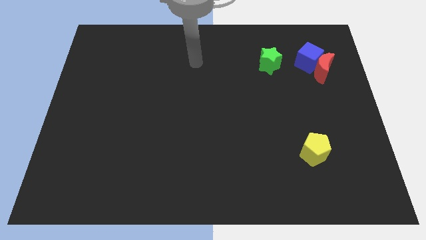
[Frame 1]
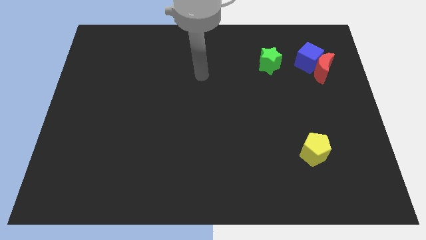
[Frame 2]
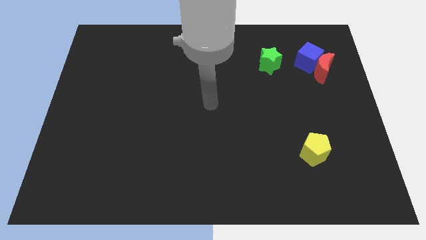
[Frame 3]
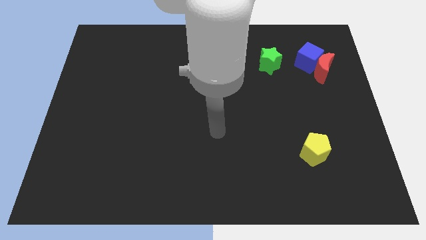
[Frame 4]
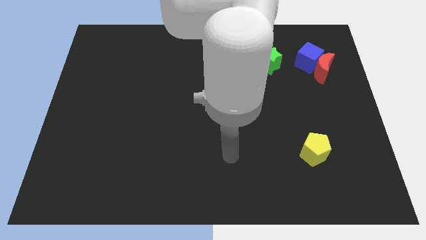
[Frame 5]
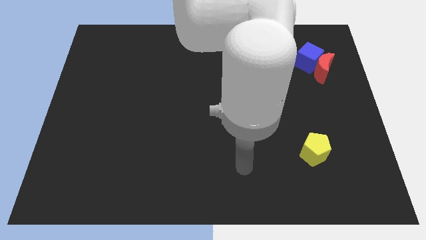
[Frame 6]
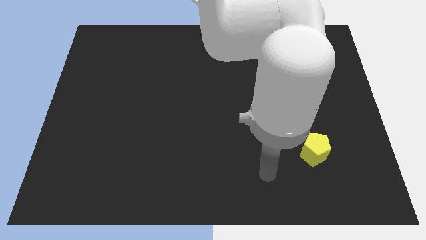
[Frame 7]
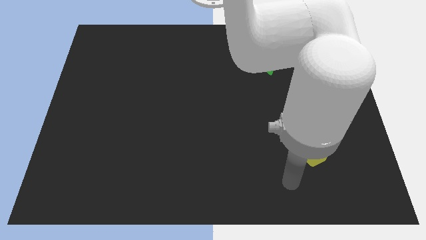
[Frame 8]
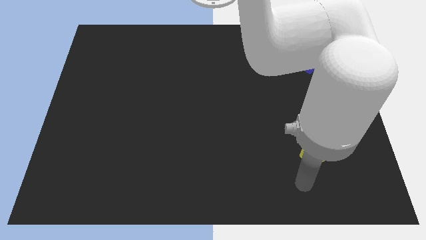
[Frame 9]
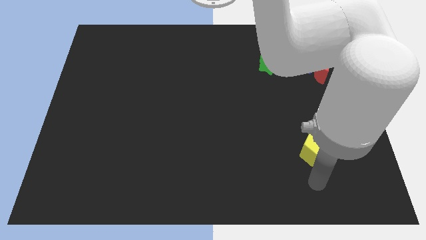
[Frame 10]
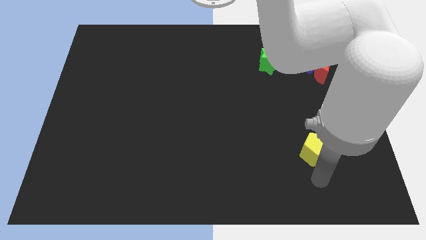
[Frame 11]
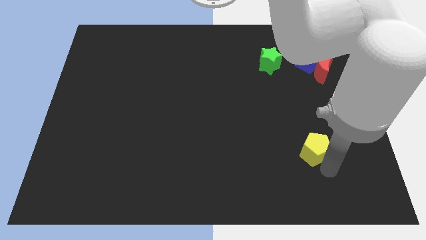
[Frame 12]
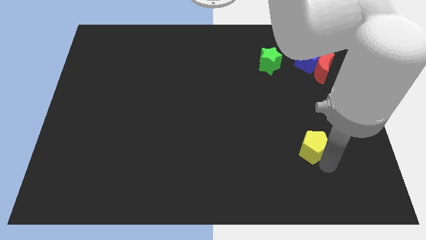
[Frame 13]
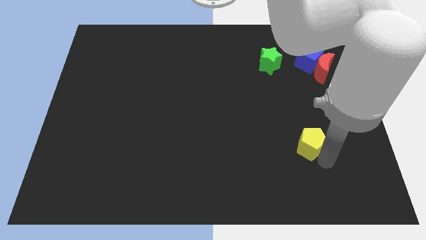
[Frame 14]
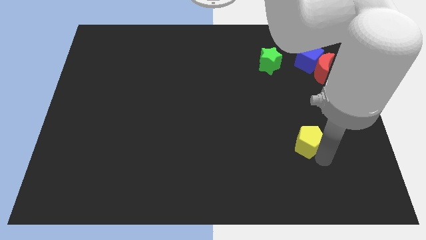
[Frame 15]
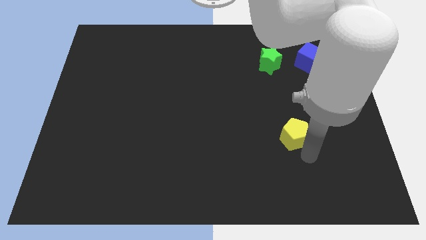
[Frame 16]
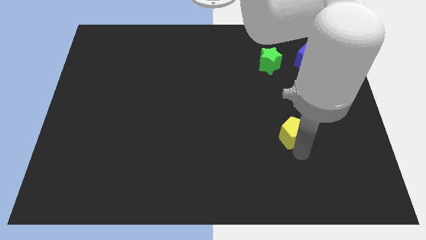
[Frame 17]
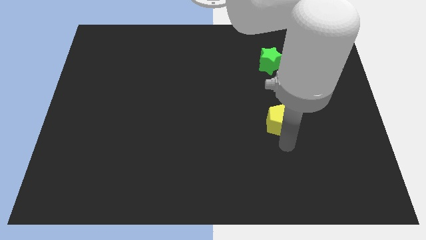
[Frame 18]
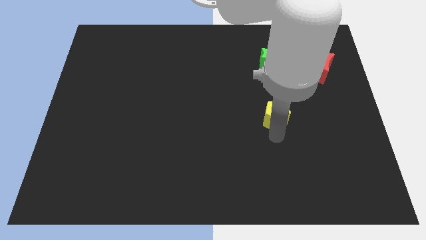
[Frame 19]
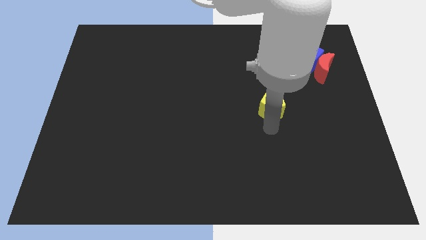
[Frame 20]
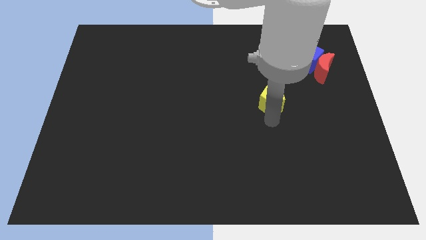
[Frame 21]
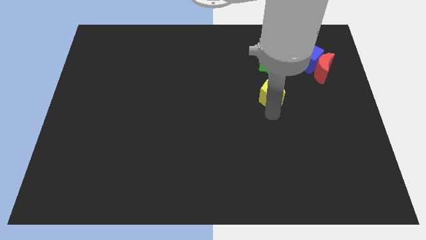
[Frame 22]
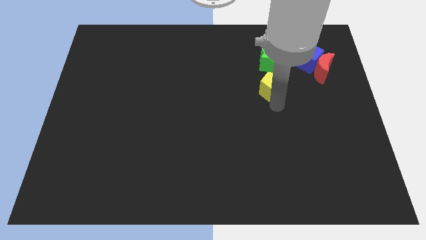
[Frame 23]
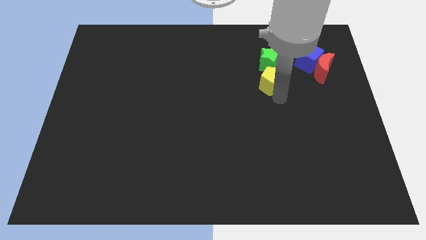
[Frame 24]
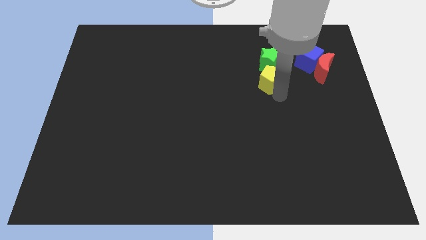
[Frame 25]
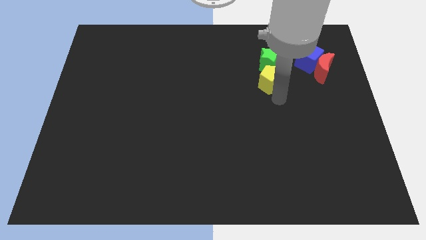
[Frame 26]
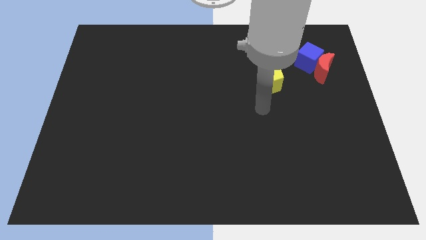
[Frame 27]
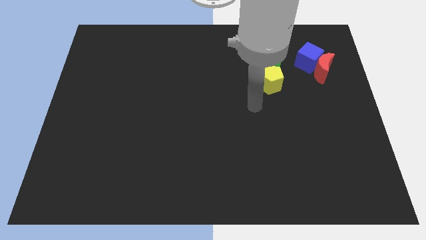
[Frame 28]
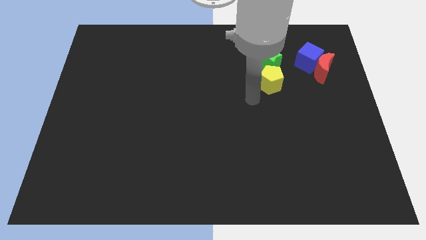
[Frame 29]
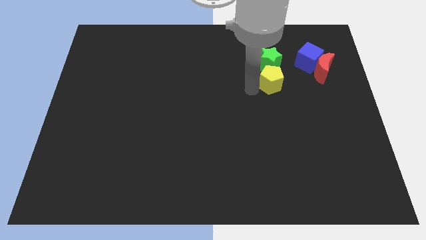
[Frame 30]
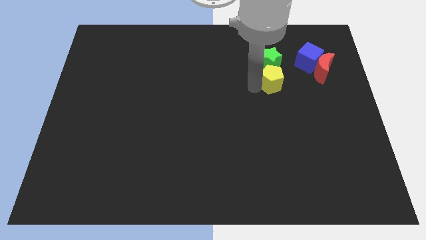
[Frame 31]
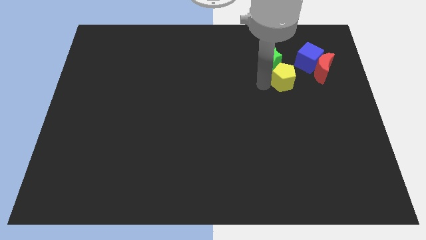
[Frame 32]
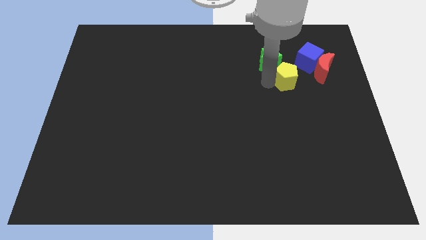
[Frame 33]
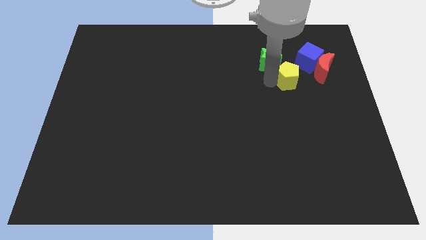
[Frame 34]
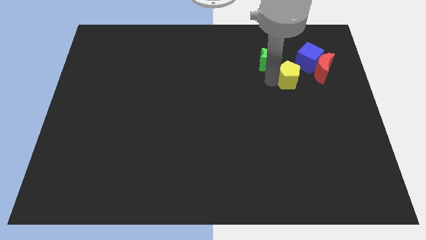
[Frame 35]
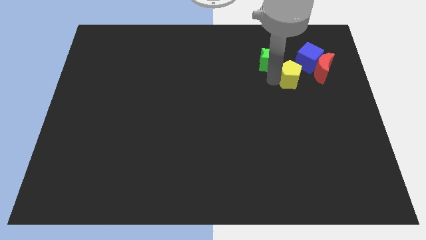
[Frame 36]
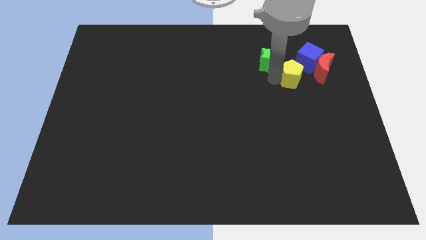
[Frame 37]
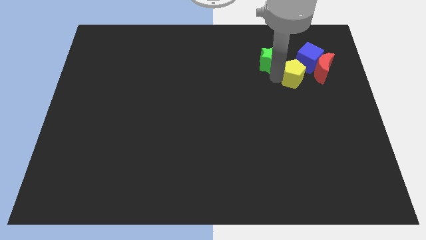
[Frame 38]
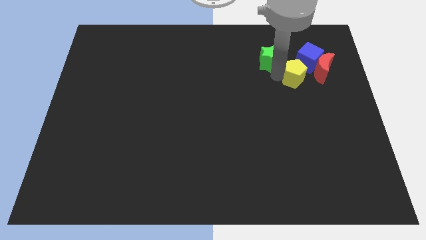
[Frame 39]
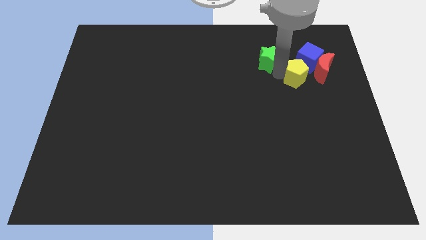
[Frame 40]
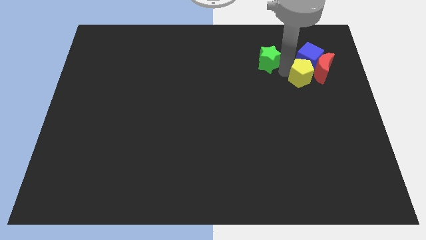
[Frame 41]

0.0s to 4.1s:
move the yellow pentagon towards the blue block

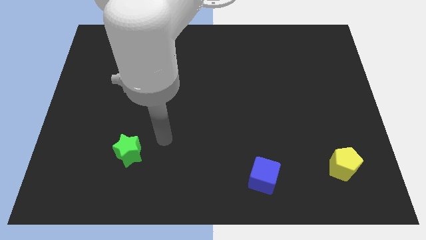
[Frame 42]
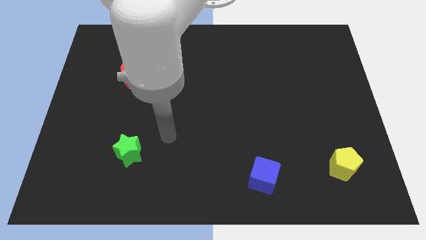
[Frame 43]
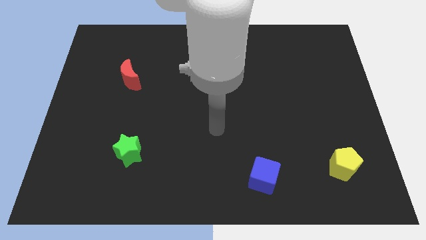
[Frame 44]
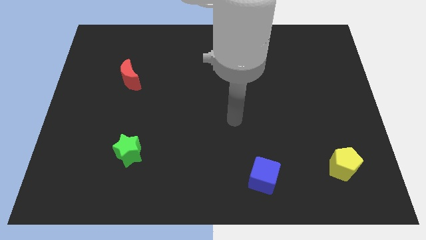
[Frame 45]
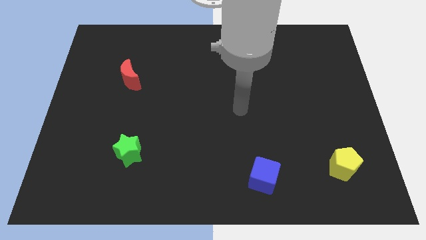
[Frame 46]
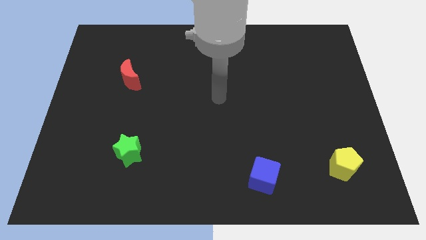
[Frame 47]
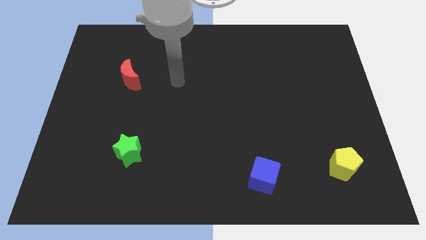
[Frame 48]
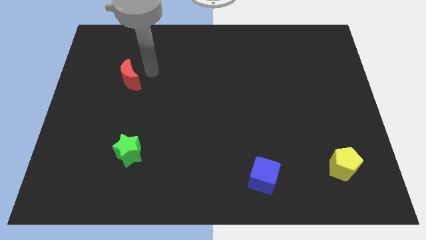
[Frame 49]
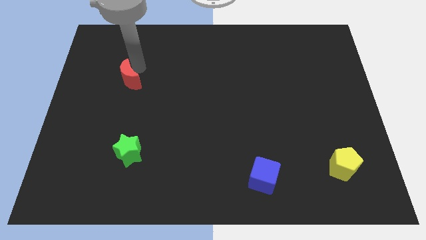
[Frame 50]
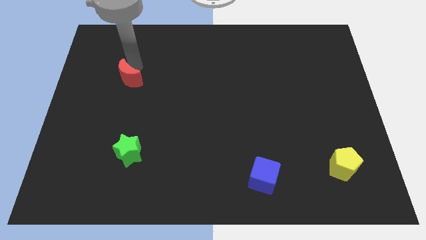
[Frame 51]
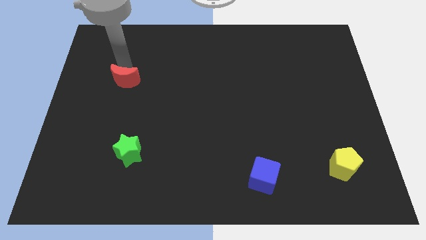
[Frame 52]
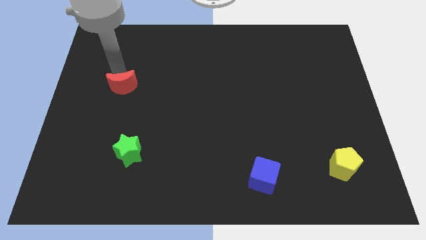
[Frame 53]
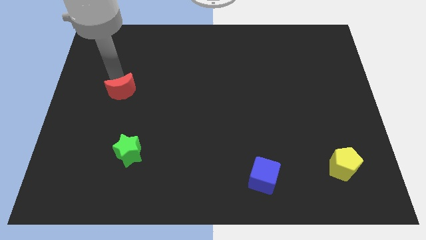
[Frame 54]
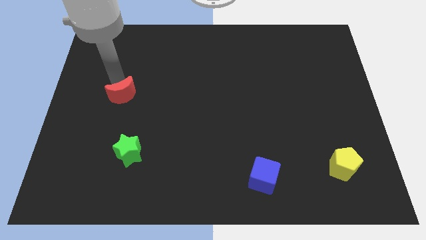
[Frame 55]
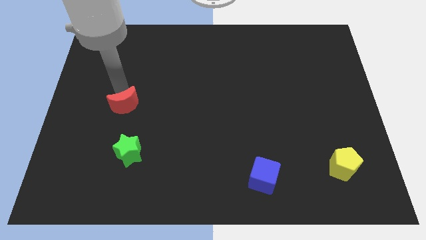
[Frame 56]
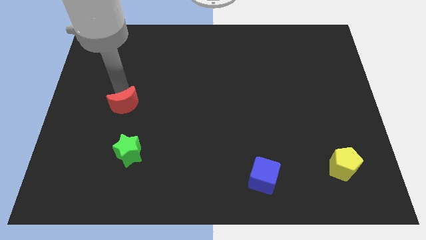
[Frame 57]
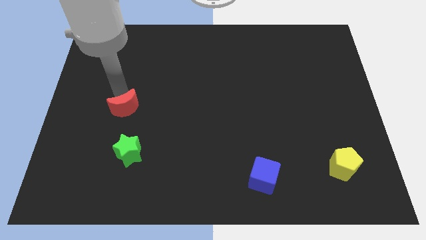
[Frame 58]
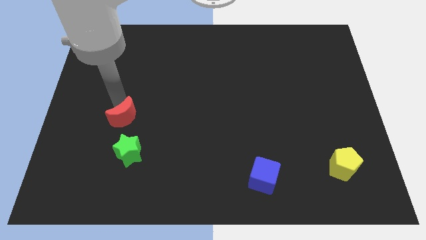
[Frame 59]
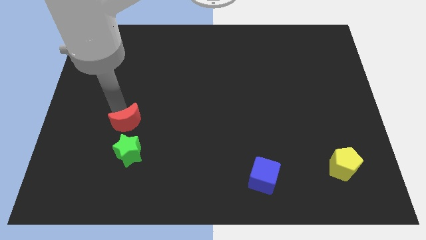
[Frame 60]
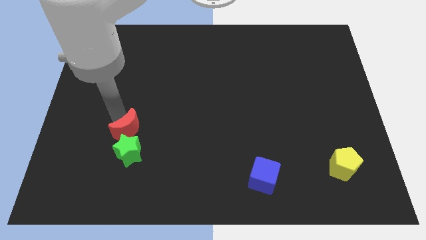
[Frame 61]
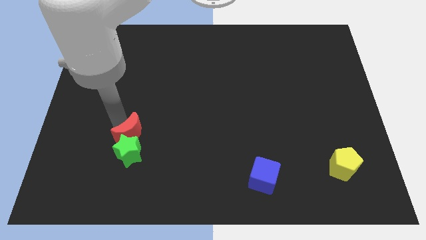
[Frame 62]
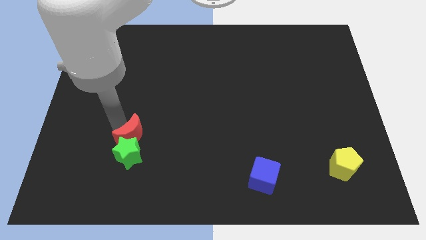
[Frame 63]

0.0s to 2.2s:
put the moon to the green star

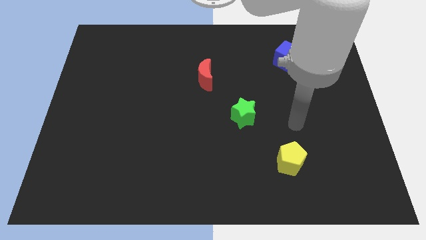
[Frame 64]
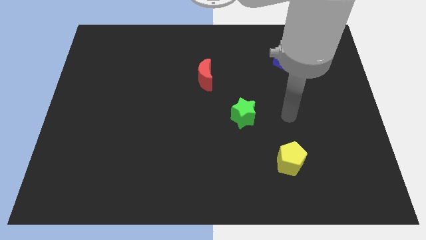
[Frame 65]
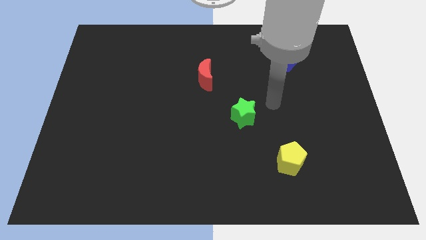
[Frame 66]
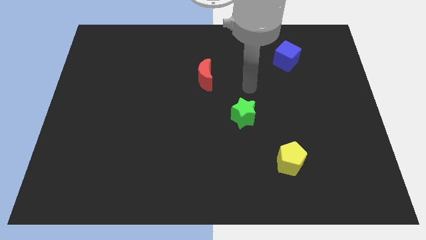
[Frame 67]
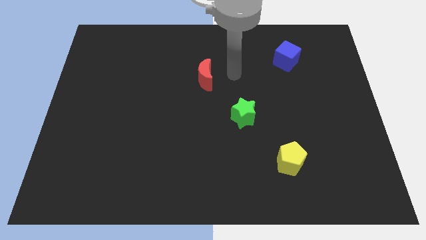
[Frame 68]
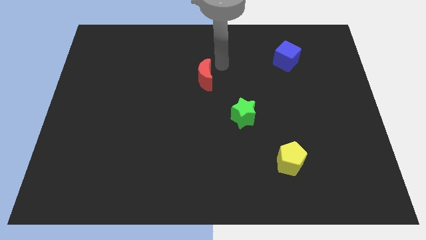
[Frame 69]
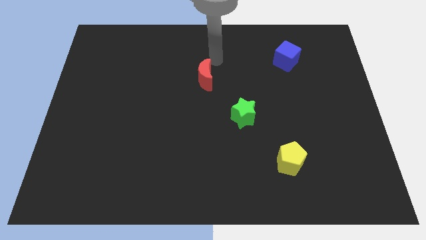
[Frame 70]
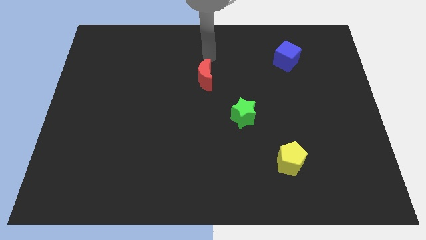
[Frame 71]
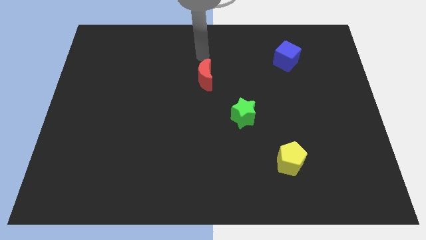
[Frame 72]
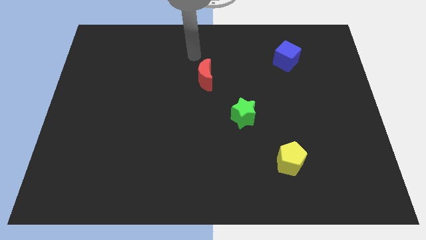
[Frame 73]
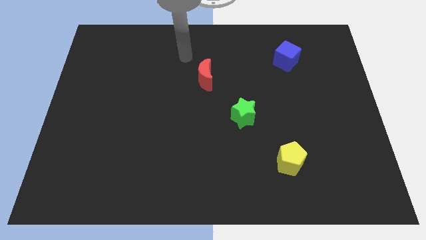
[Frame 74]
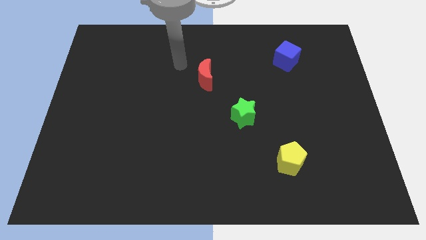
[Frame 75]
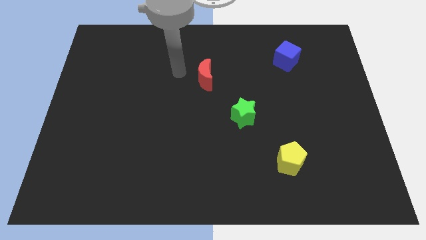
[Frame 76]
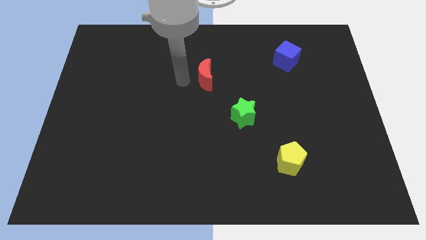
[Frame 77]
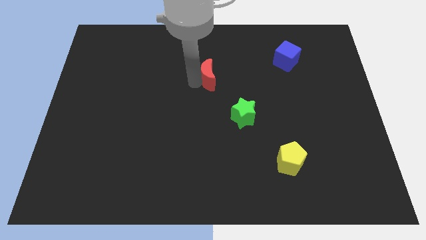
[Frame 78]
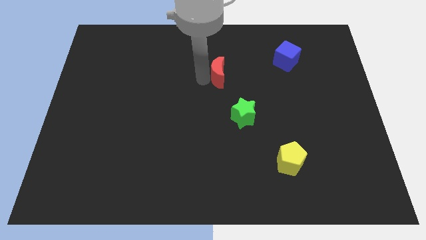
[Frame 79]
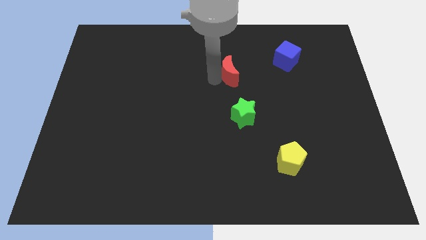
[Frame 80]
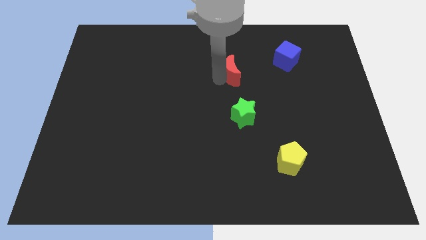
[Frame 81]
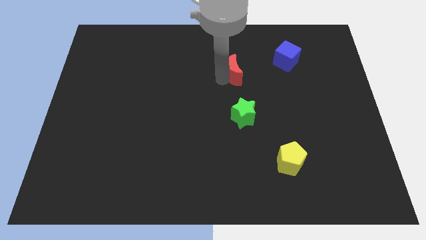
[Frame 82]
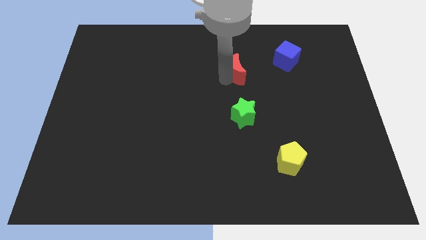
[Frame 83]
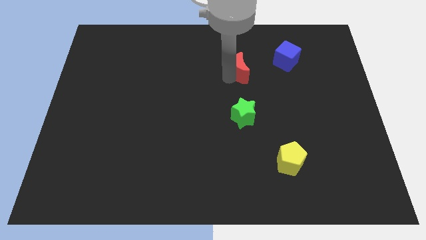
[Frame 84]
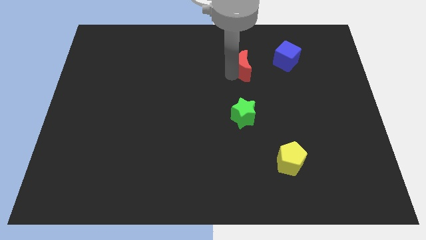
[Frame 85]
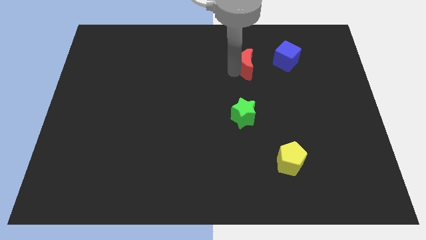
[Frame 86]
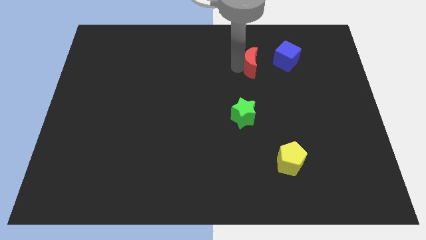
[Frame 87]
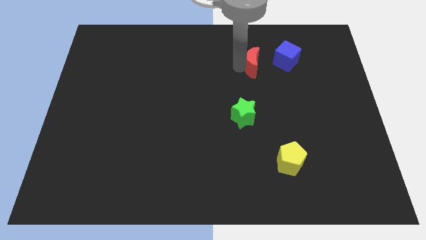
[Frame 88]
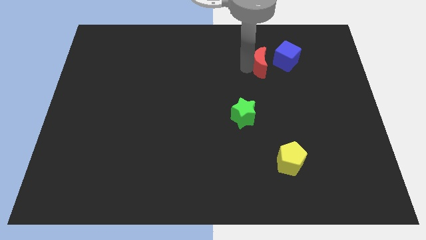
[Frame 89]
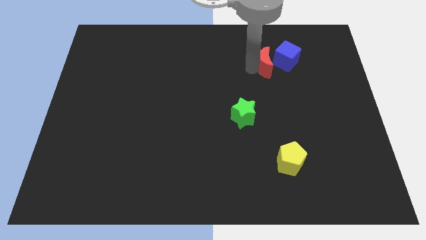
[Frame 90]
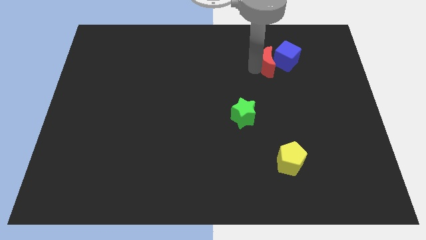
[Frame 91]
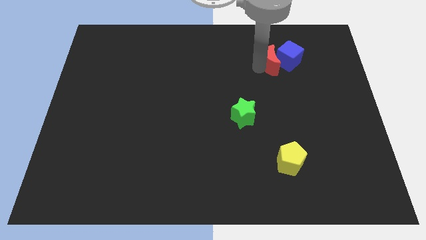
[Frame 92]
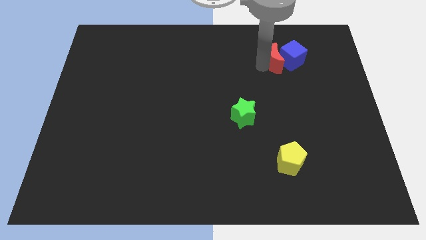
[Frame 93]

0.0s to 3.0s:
move the moon to the cube
